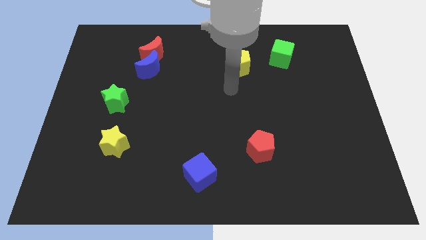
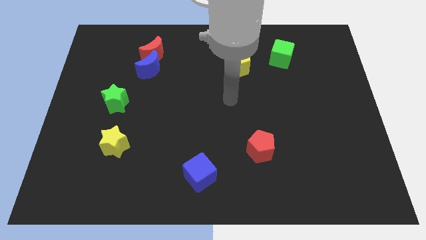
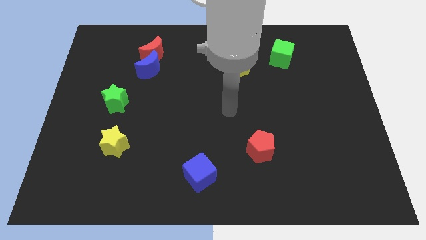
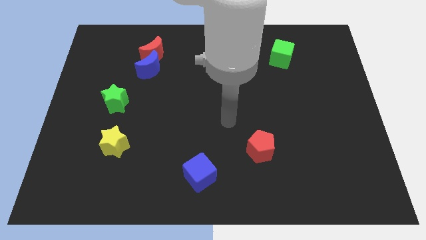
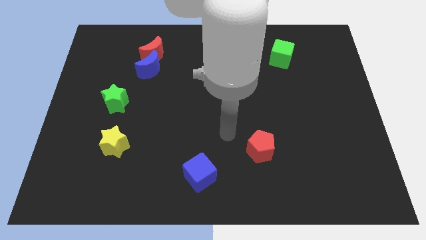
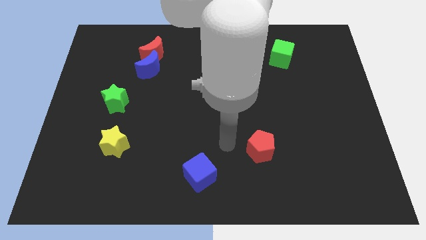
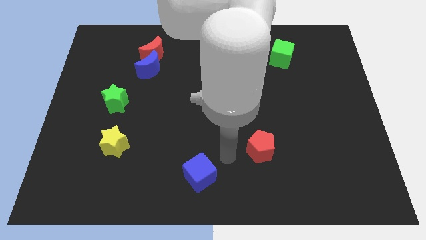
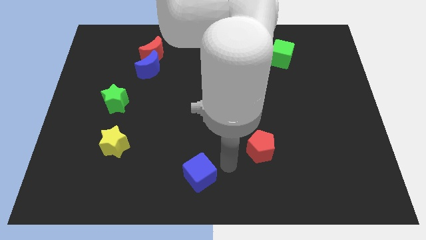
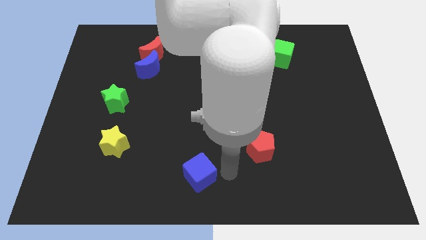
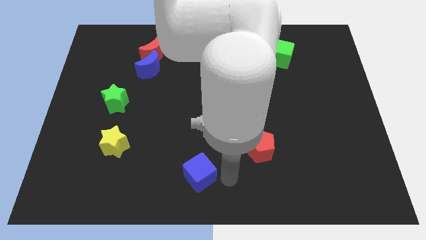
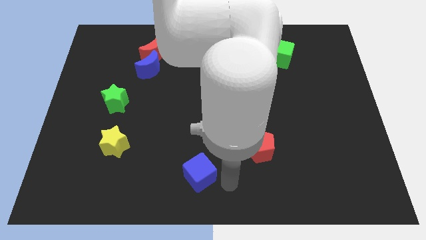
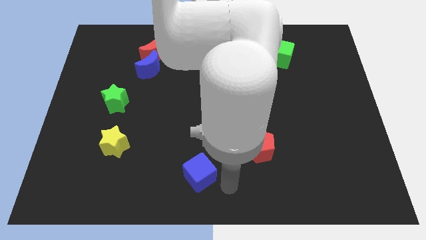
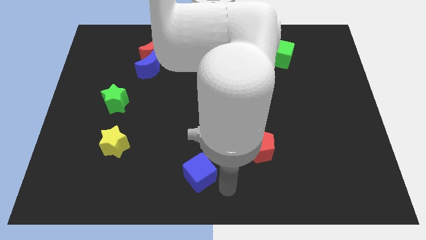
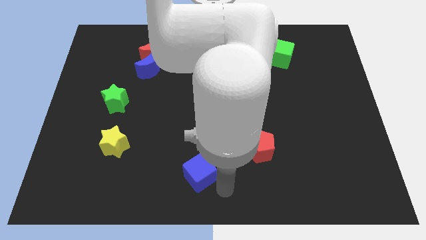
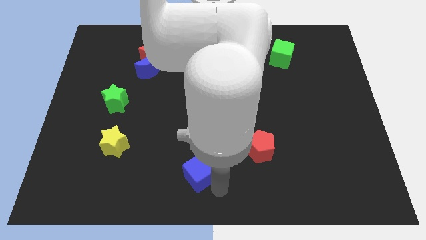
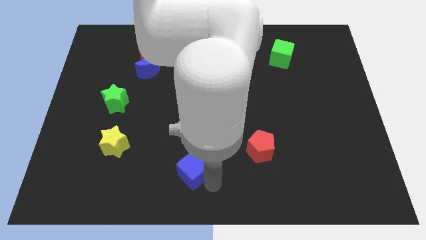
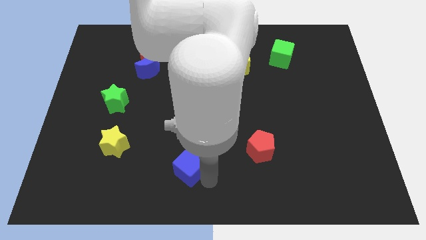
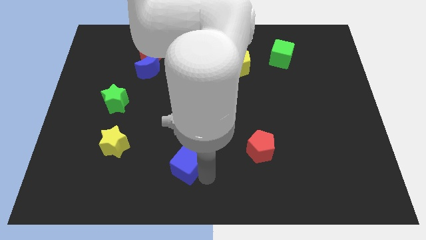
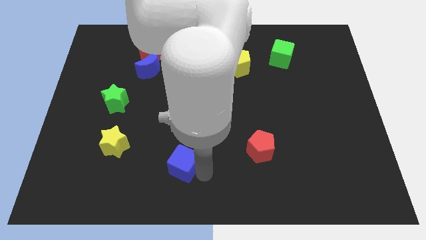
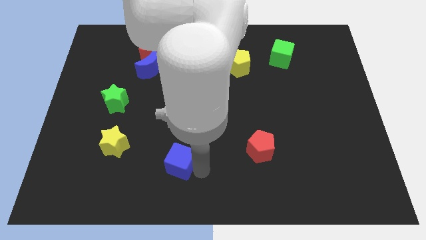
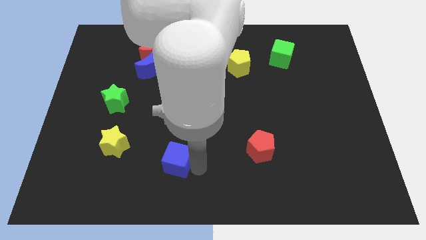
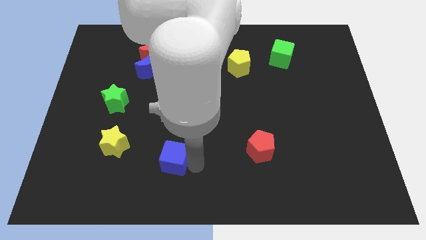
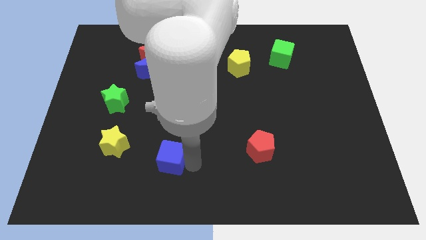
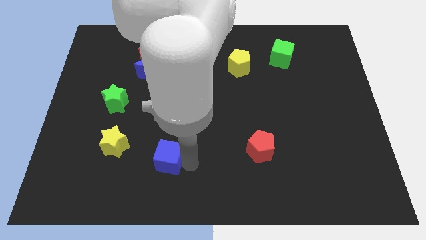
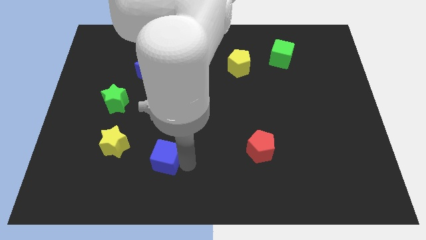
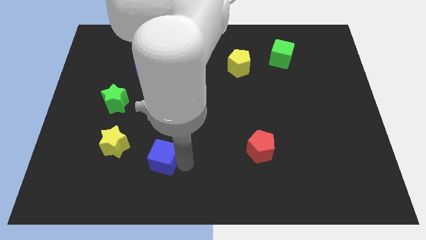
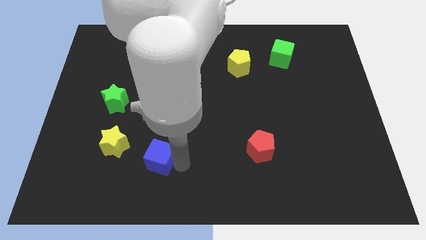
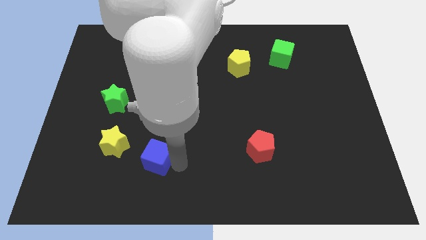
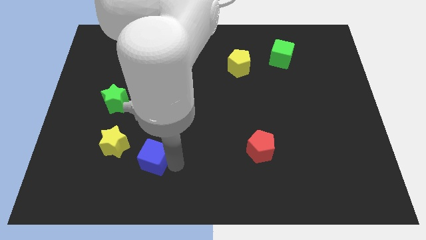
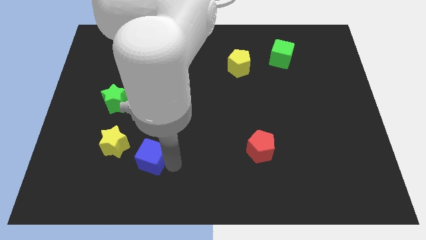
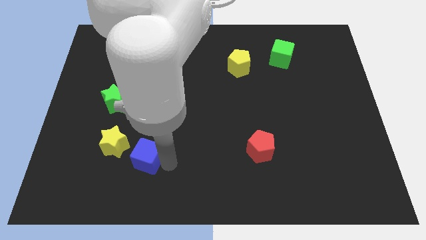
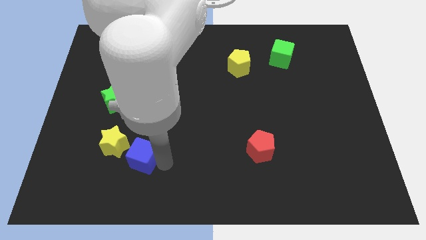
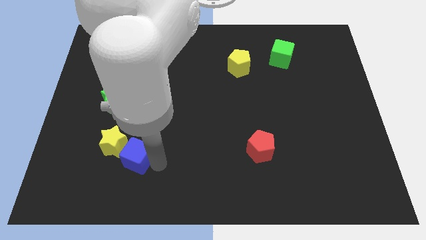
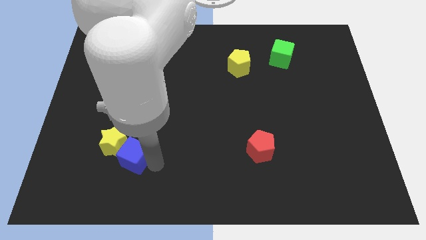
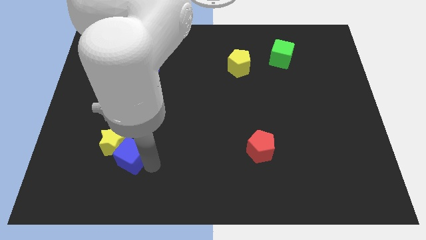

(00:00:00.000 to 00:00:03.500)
push the blue cube next to the yellow star

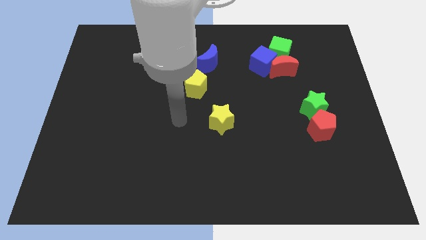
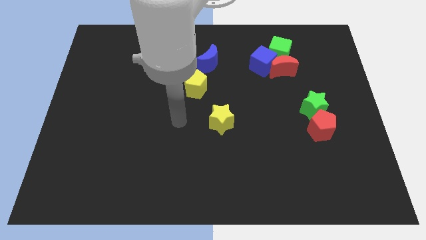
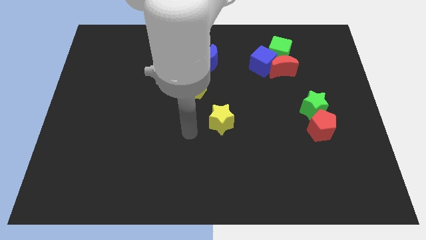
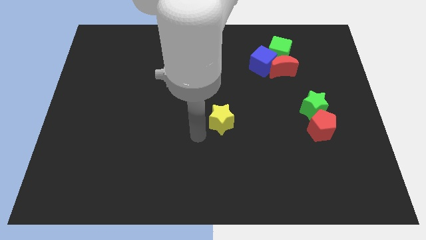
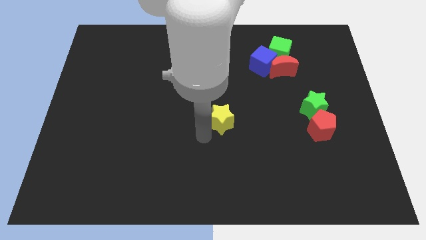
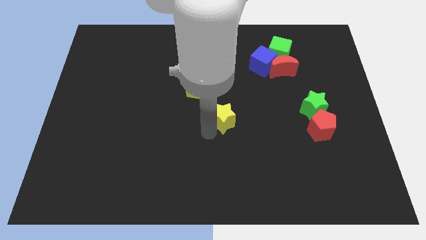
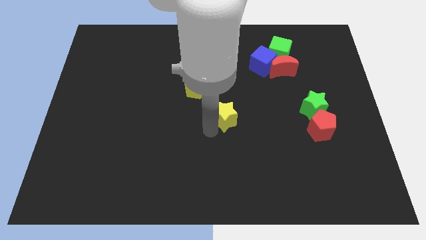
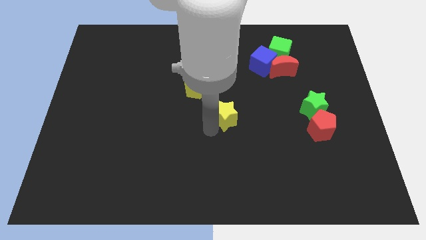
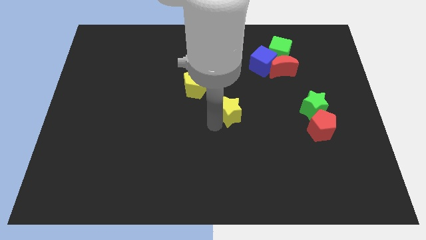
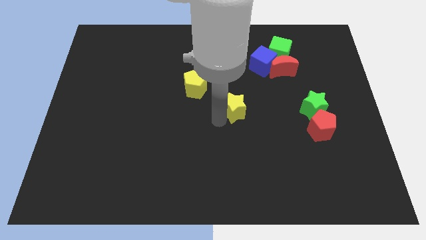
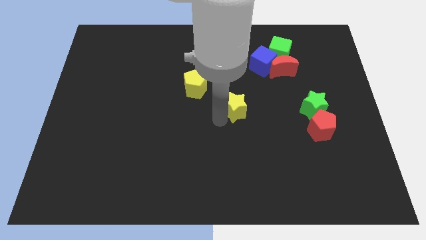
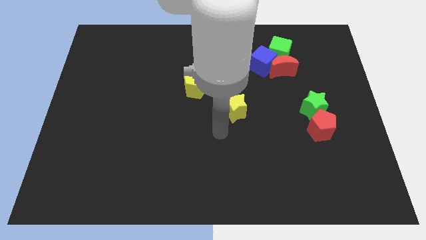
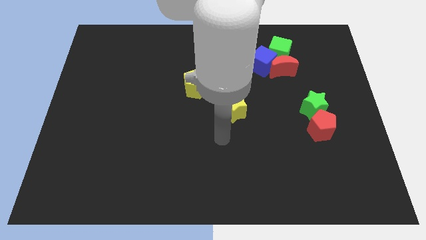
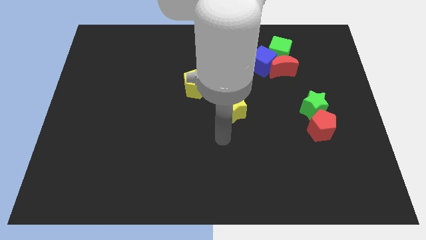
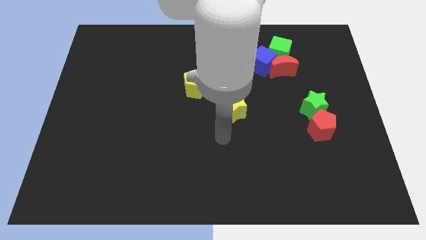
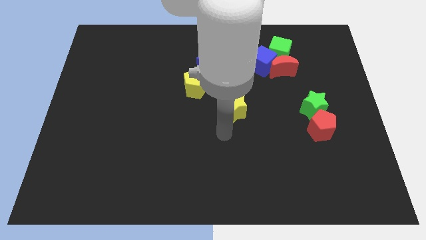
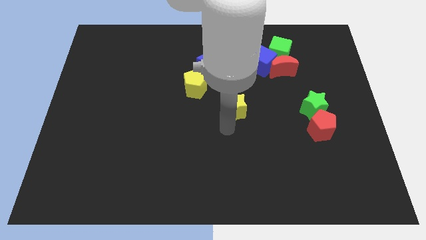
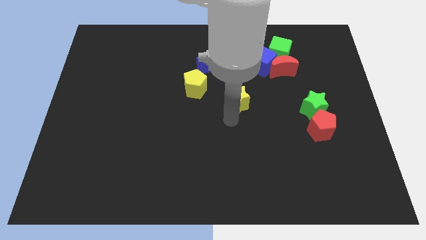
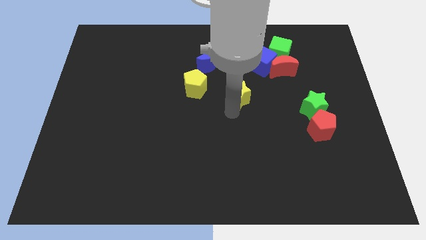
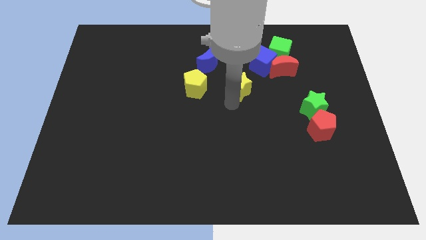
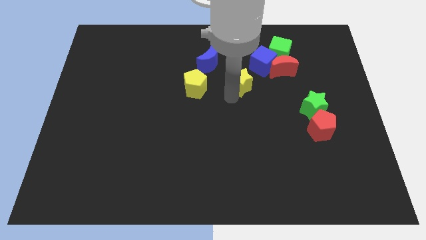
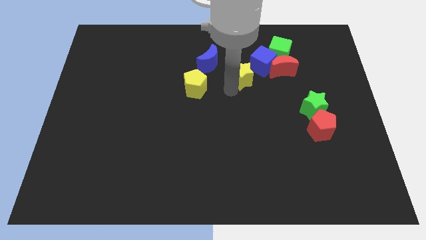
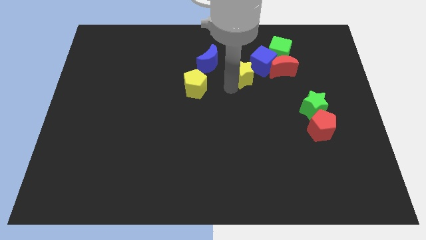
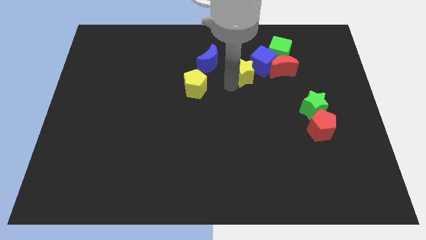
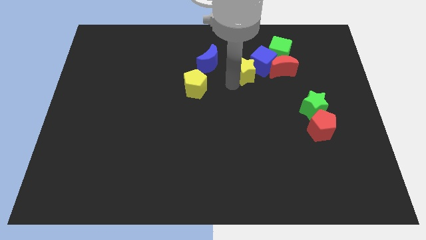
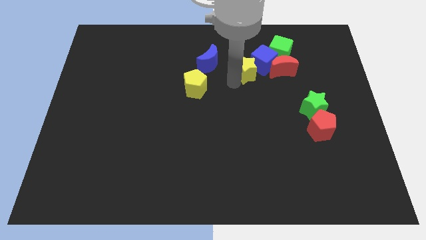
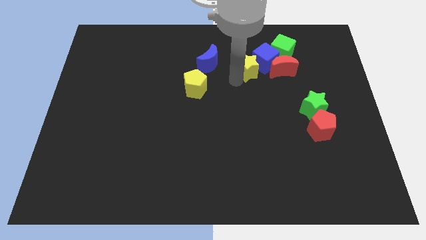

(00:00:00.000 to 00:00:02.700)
move the yellow star next to the blue cube

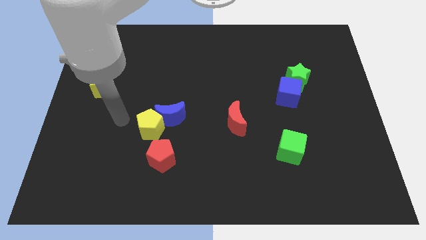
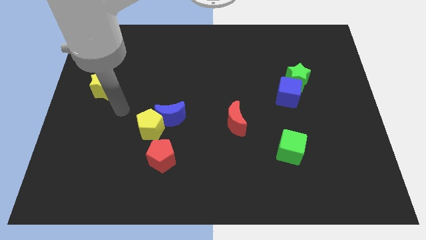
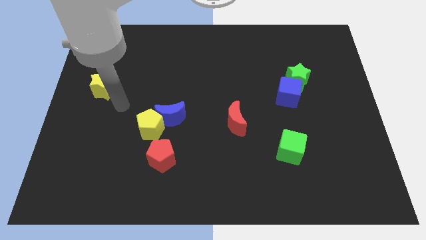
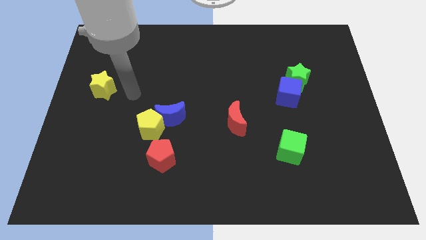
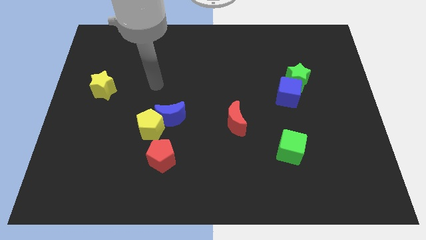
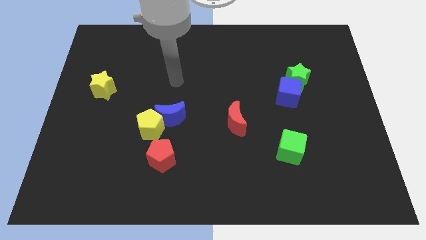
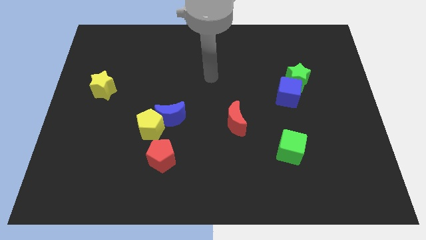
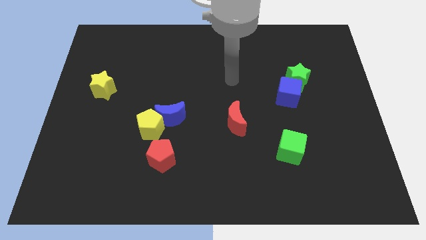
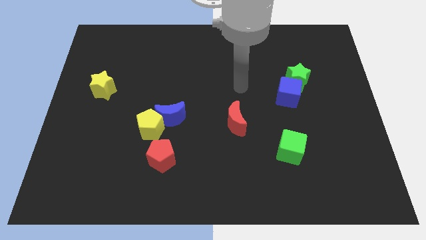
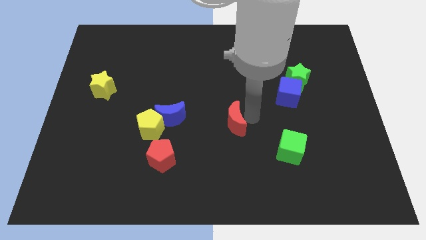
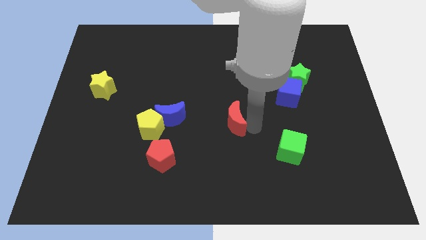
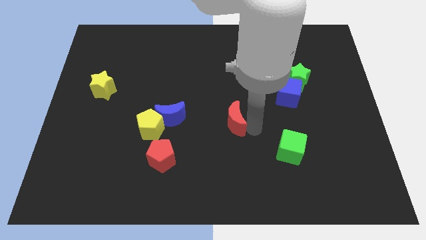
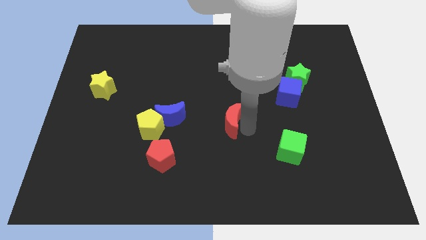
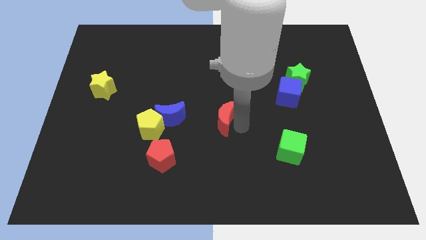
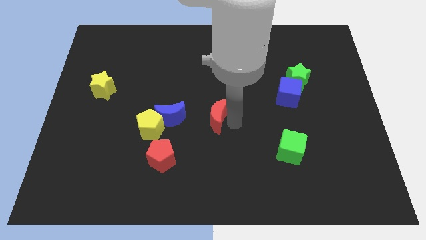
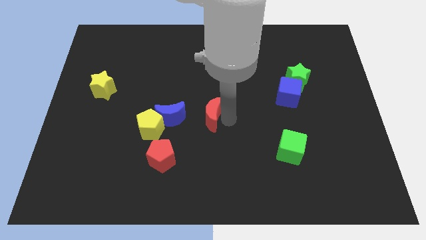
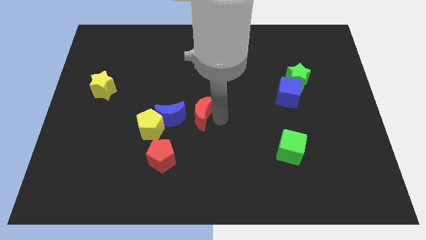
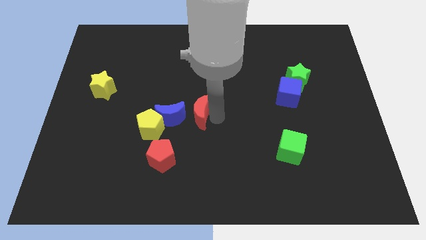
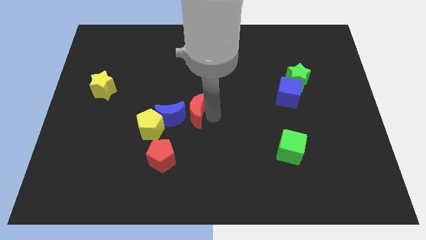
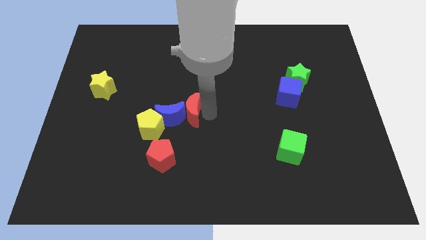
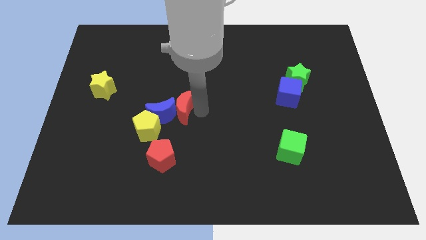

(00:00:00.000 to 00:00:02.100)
move the red moon to the blue moon

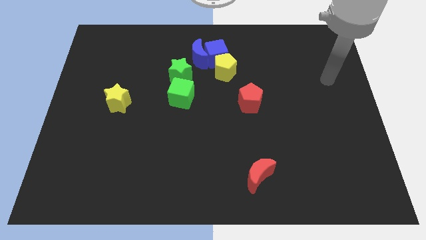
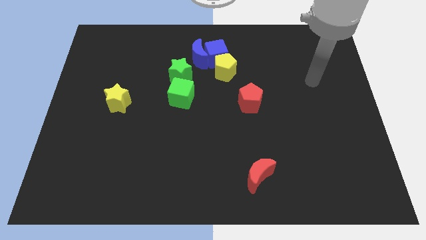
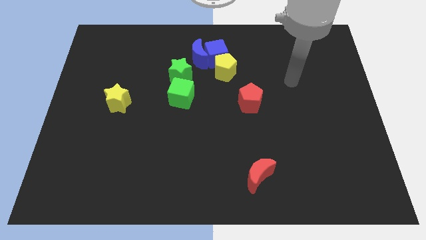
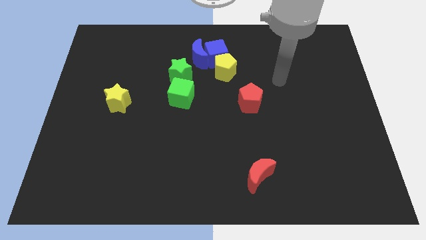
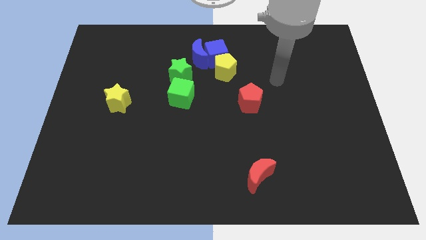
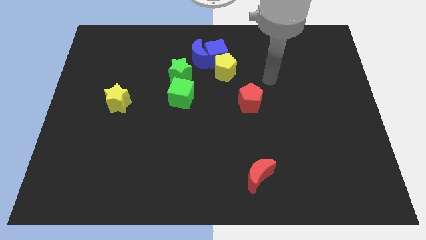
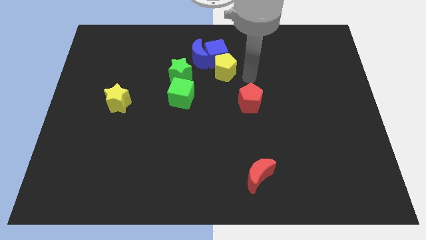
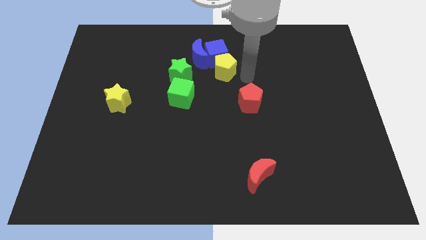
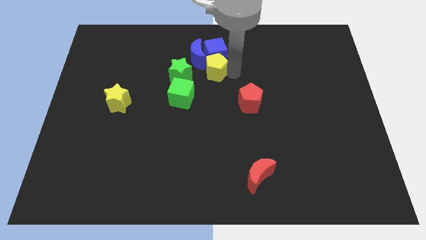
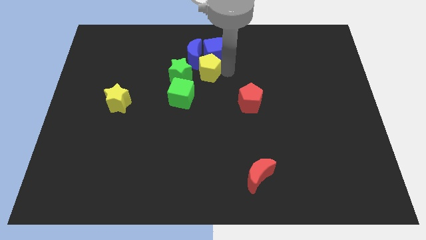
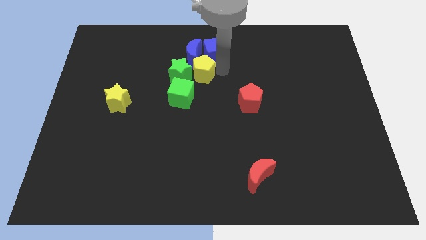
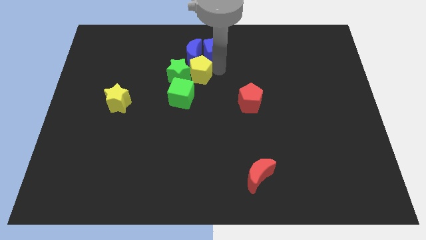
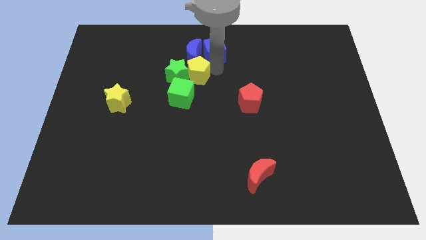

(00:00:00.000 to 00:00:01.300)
push the yellow pentagon close to the blue moon
